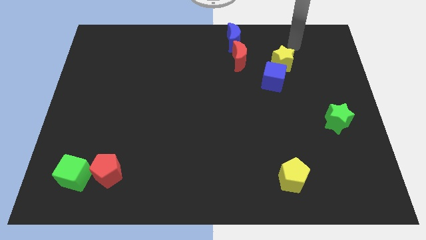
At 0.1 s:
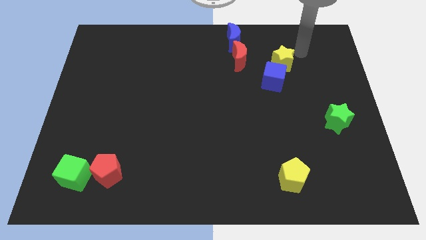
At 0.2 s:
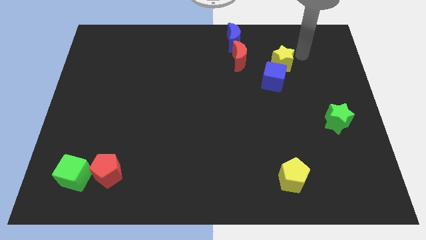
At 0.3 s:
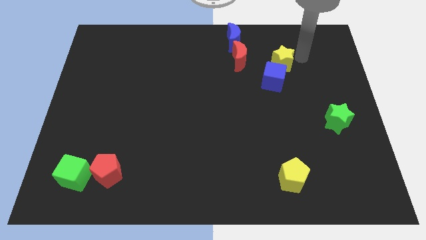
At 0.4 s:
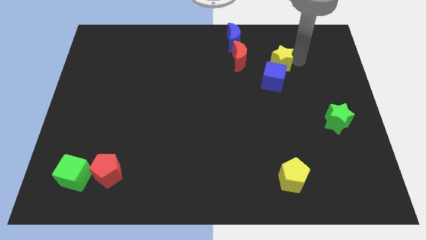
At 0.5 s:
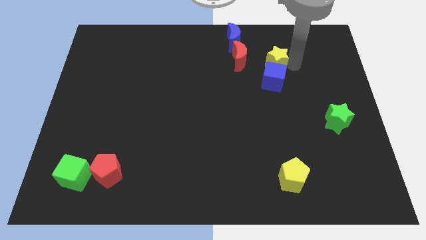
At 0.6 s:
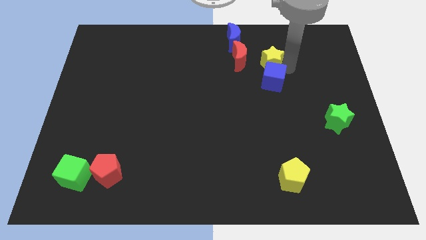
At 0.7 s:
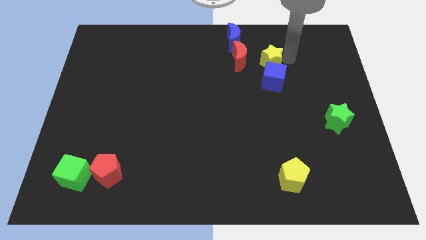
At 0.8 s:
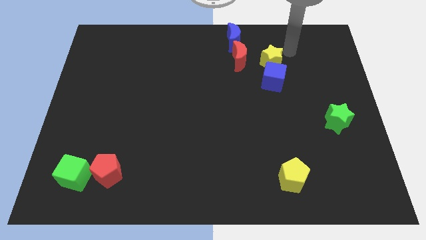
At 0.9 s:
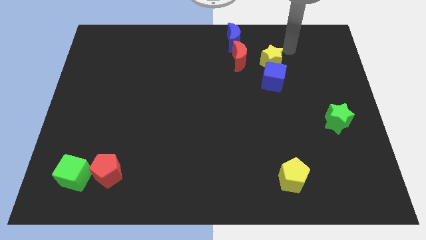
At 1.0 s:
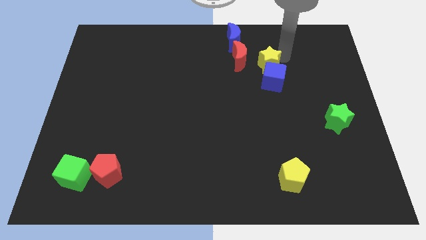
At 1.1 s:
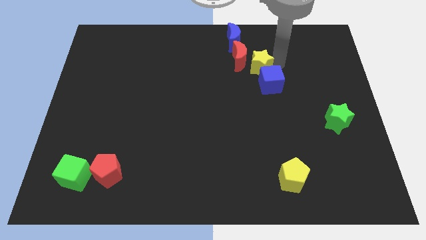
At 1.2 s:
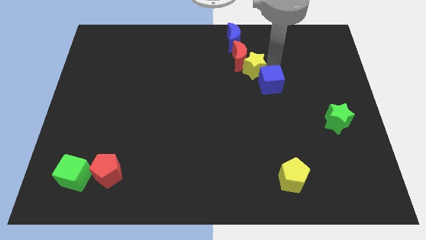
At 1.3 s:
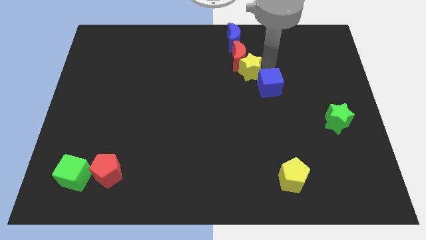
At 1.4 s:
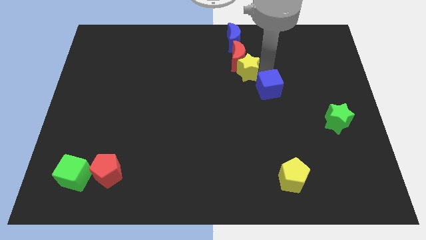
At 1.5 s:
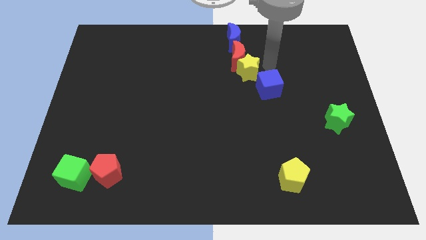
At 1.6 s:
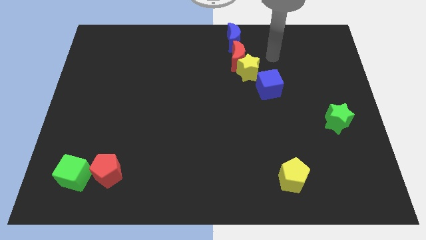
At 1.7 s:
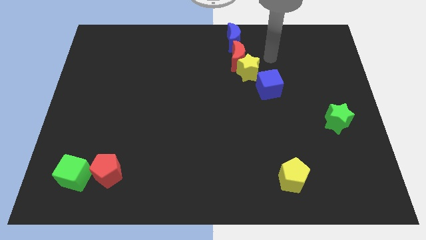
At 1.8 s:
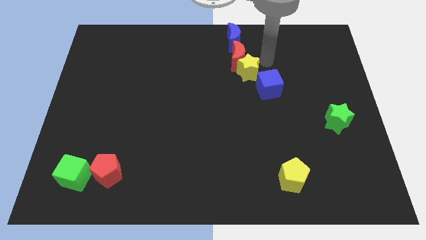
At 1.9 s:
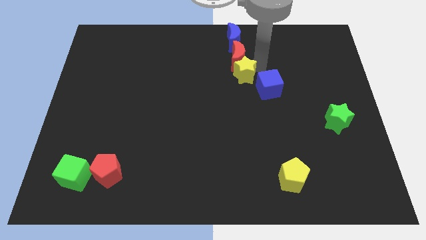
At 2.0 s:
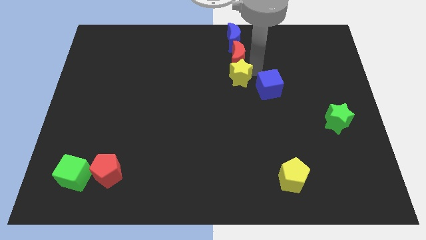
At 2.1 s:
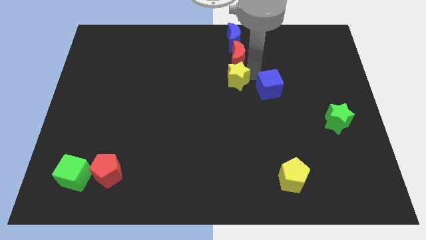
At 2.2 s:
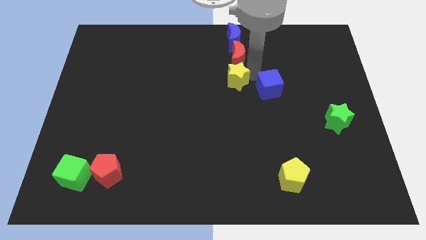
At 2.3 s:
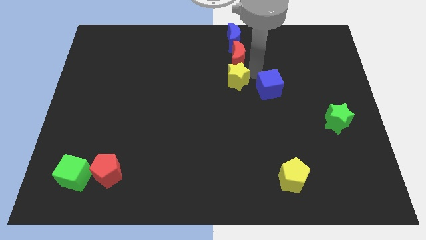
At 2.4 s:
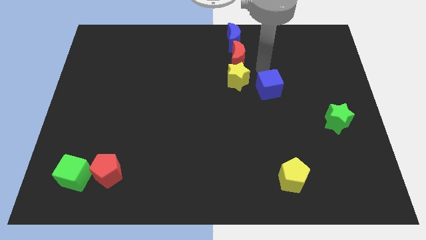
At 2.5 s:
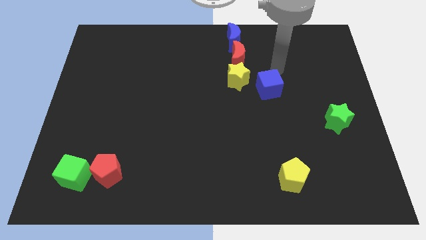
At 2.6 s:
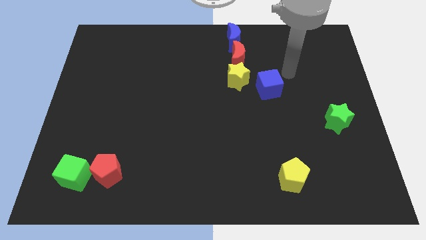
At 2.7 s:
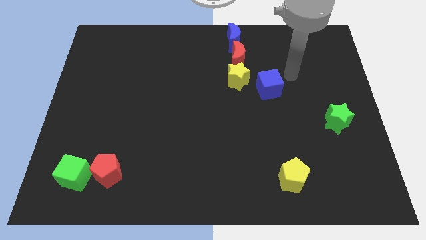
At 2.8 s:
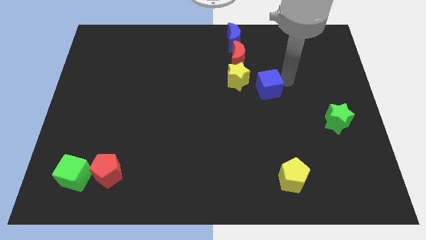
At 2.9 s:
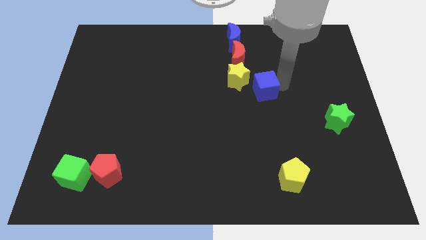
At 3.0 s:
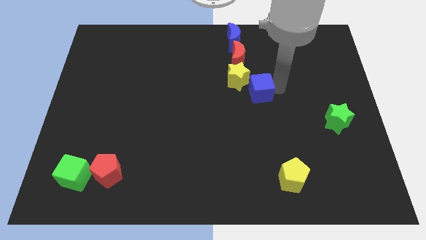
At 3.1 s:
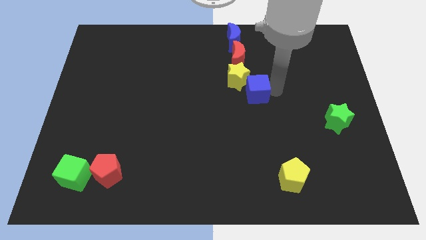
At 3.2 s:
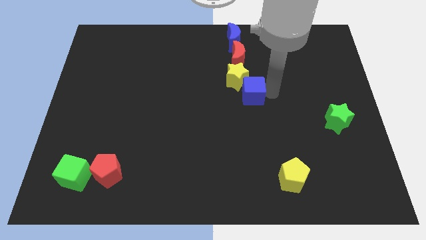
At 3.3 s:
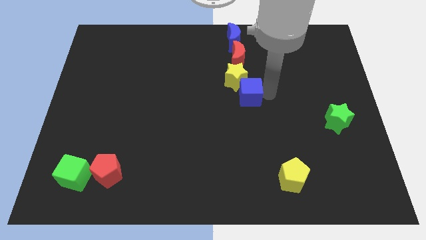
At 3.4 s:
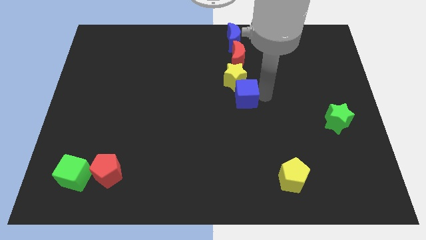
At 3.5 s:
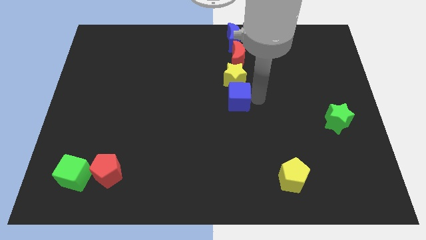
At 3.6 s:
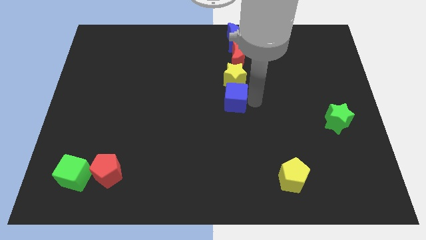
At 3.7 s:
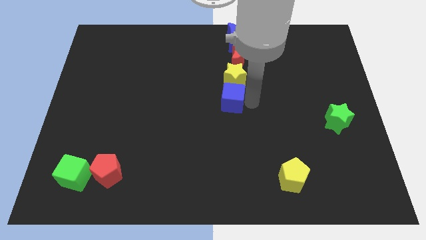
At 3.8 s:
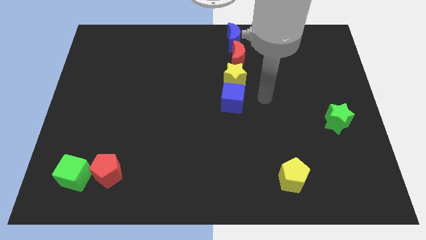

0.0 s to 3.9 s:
drag the yellow star to the bottom of the red crescent

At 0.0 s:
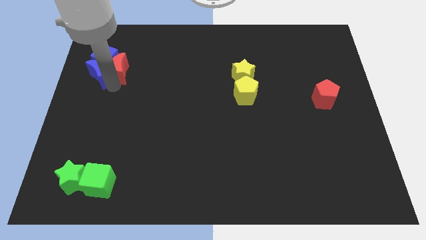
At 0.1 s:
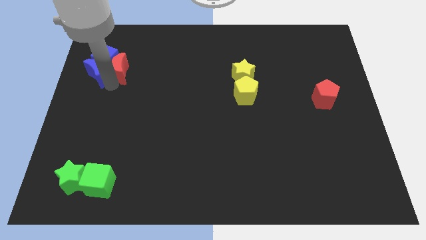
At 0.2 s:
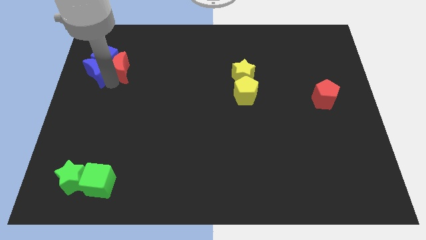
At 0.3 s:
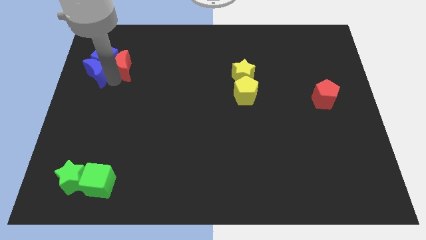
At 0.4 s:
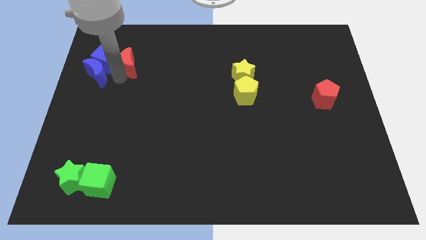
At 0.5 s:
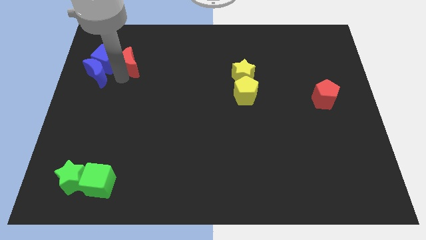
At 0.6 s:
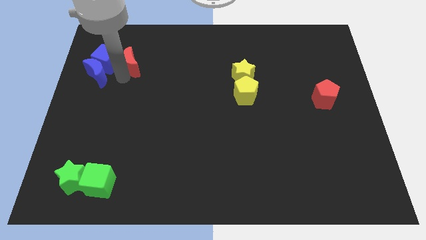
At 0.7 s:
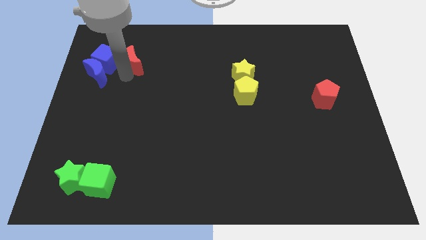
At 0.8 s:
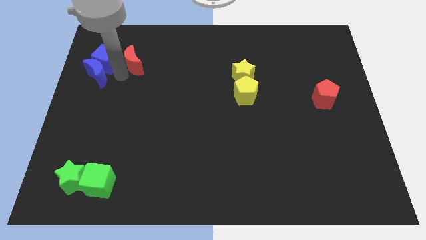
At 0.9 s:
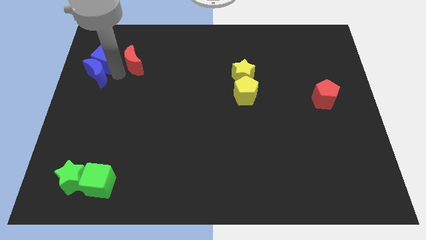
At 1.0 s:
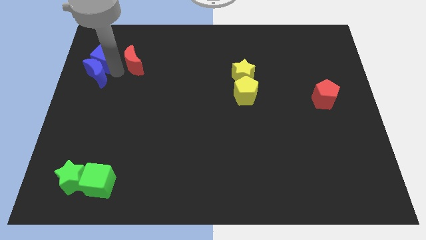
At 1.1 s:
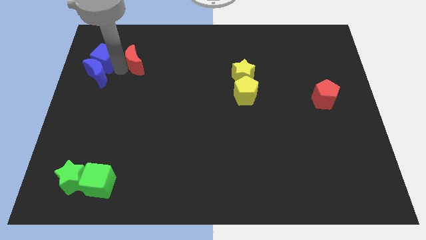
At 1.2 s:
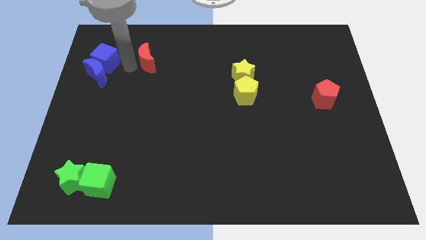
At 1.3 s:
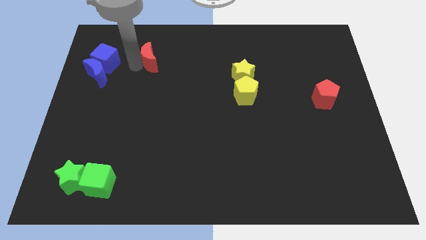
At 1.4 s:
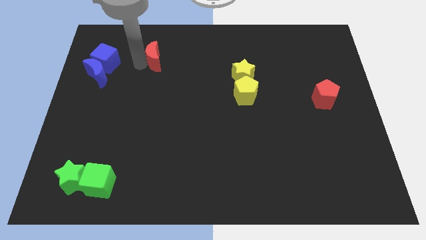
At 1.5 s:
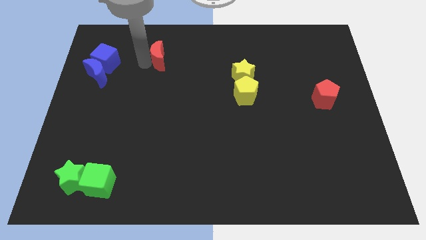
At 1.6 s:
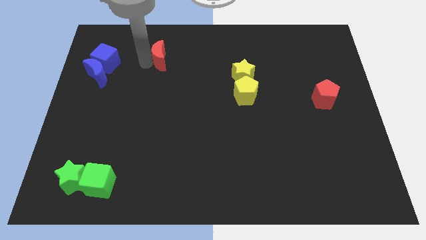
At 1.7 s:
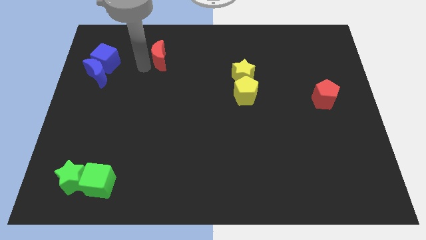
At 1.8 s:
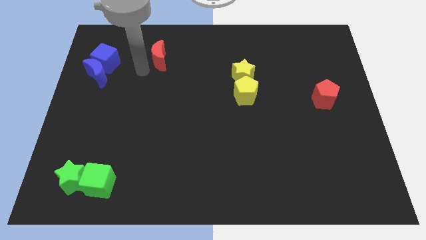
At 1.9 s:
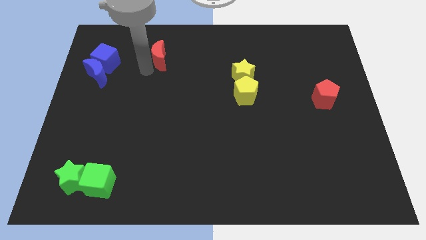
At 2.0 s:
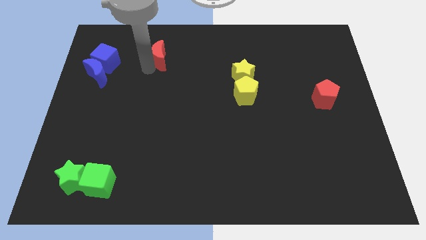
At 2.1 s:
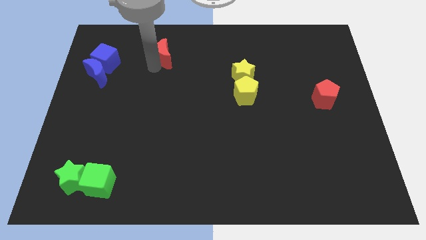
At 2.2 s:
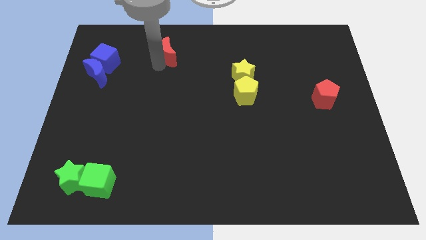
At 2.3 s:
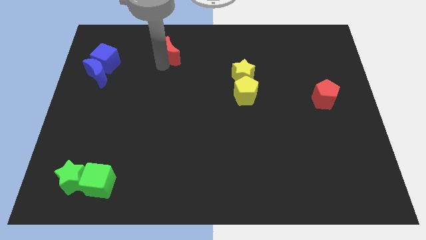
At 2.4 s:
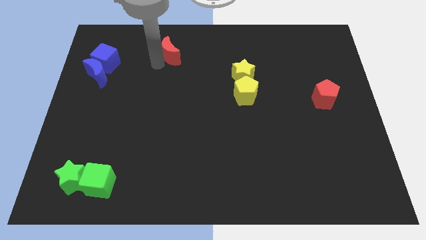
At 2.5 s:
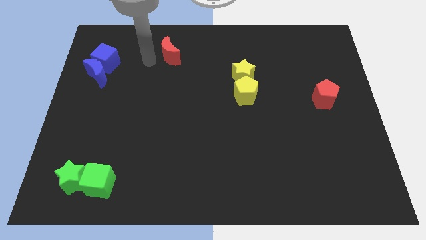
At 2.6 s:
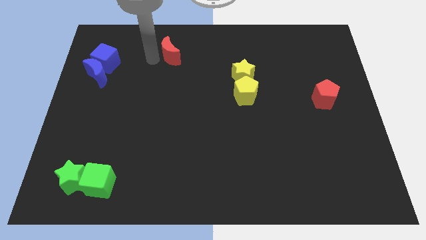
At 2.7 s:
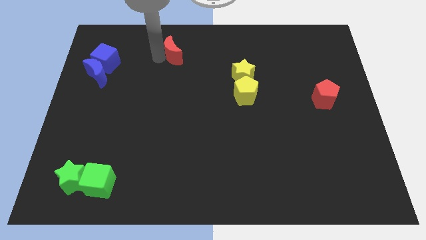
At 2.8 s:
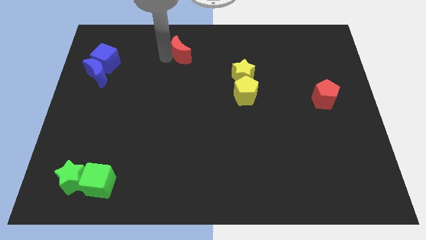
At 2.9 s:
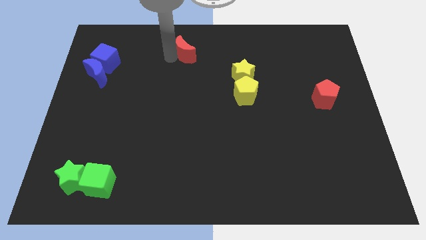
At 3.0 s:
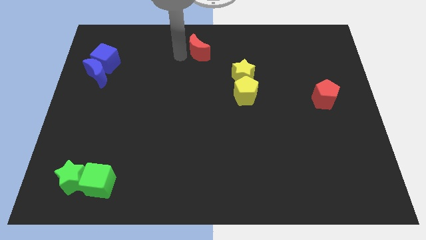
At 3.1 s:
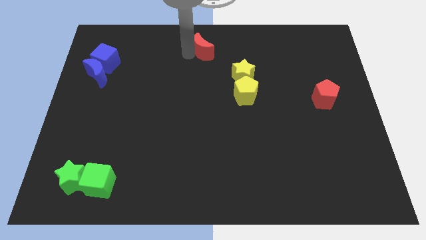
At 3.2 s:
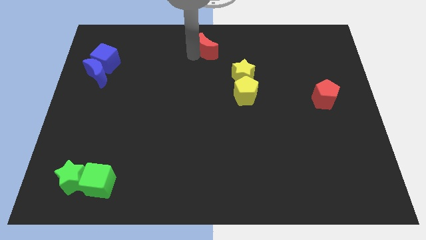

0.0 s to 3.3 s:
separate the red moon from blue blocks

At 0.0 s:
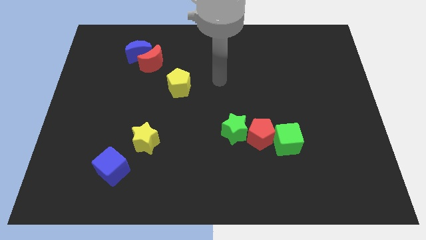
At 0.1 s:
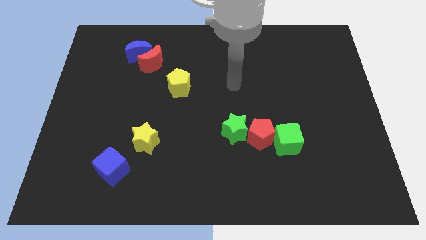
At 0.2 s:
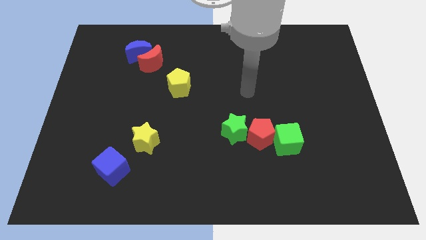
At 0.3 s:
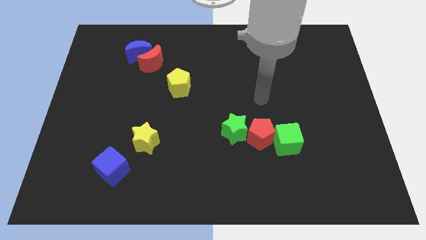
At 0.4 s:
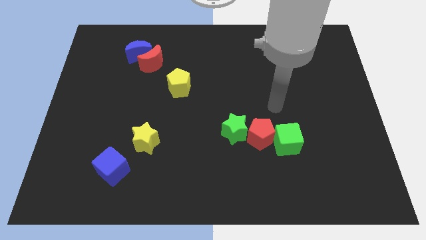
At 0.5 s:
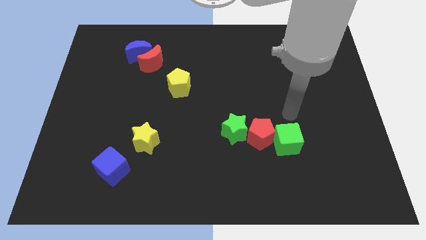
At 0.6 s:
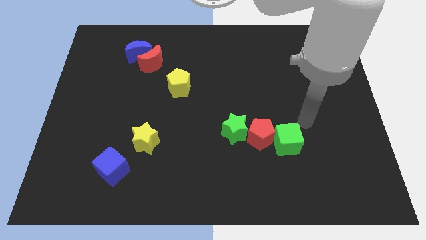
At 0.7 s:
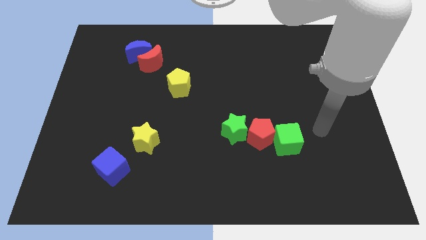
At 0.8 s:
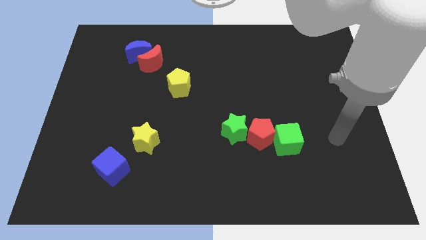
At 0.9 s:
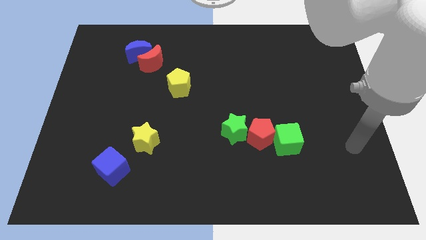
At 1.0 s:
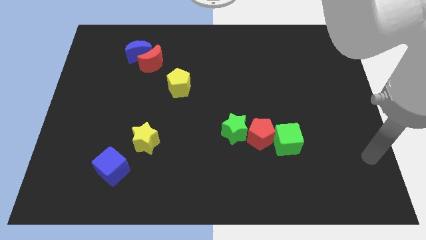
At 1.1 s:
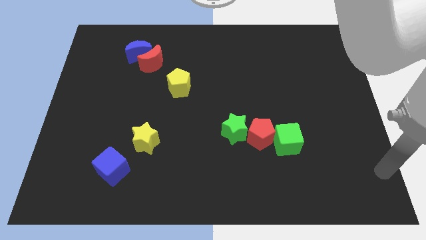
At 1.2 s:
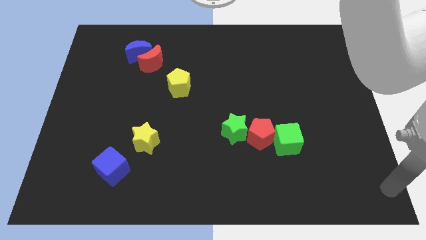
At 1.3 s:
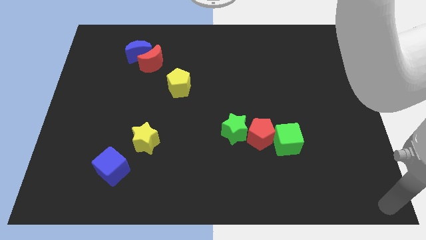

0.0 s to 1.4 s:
go to the bottom right corner of the table

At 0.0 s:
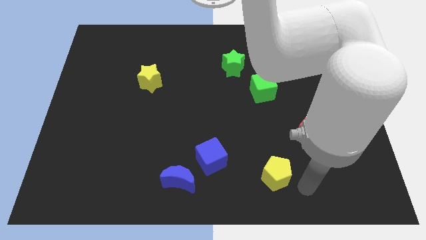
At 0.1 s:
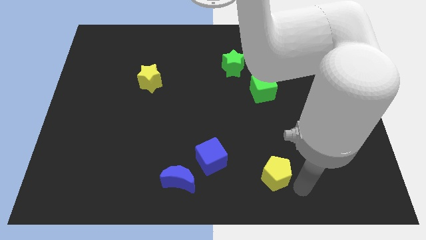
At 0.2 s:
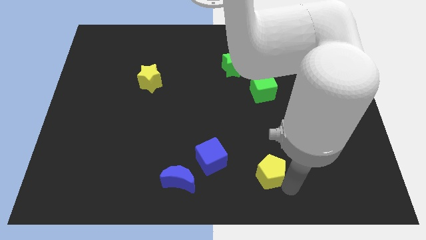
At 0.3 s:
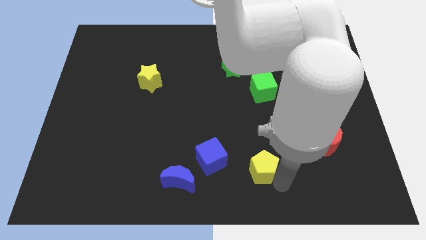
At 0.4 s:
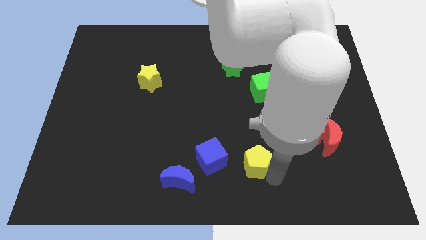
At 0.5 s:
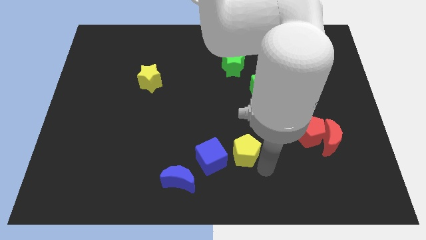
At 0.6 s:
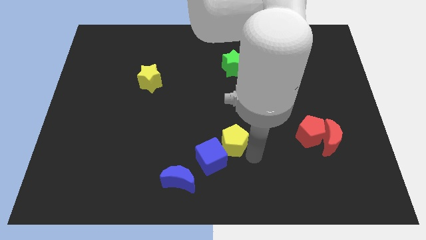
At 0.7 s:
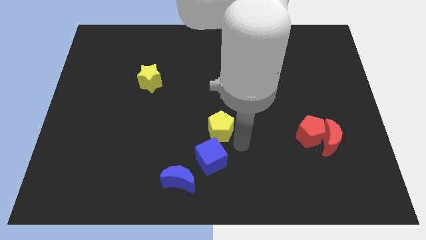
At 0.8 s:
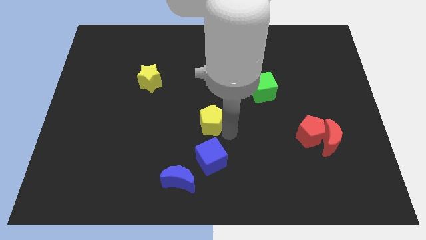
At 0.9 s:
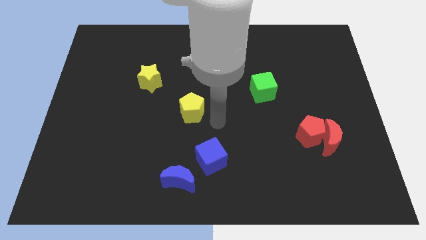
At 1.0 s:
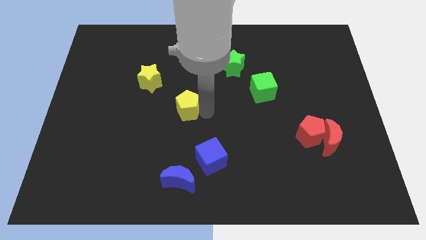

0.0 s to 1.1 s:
move the yellow pentagon towards the center of the board
